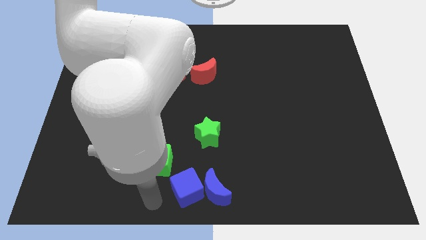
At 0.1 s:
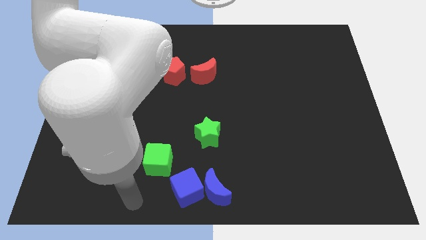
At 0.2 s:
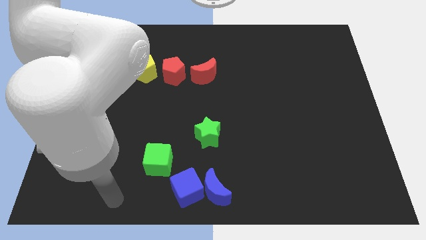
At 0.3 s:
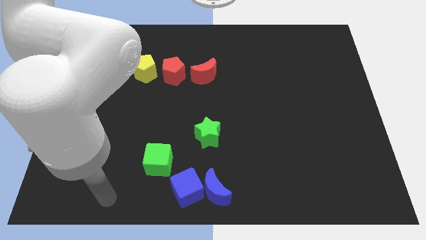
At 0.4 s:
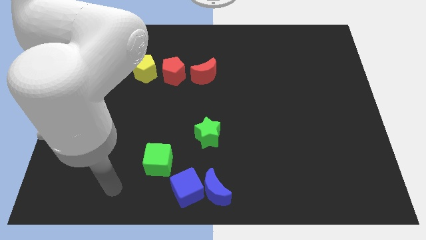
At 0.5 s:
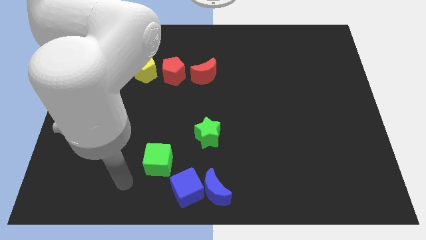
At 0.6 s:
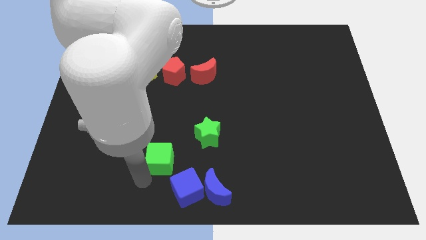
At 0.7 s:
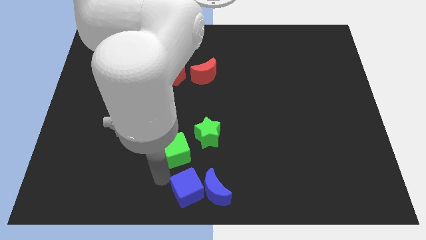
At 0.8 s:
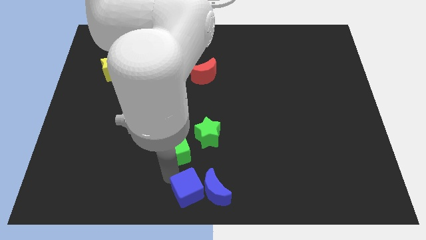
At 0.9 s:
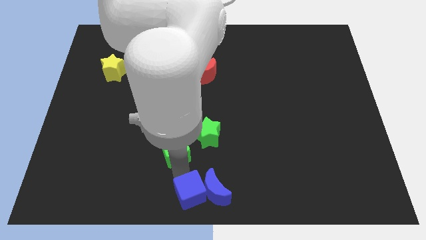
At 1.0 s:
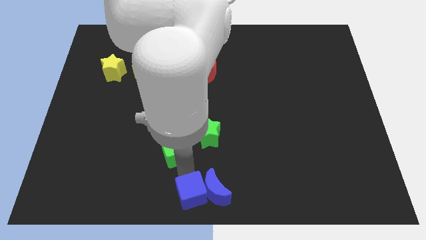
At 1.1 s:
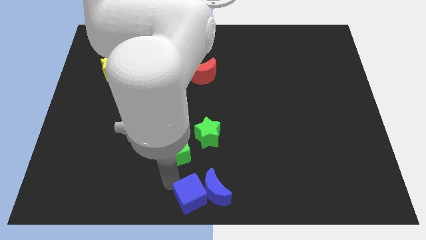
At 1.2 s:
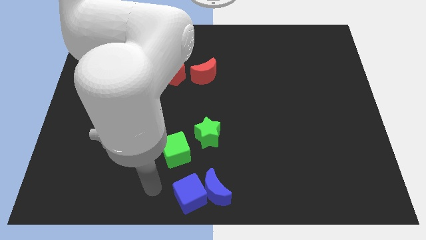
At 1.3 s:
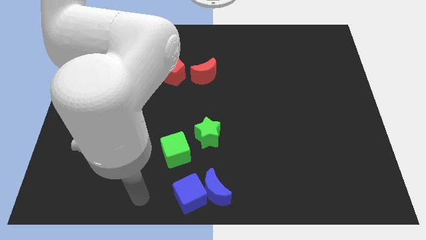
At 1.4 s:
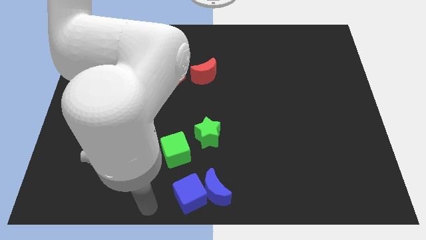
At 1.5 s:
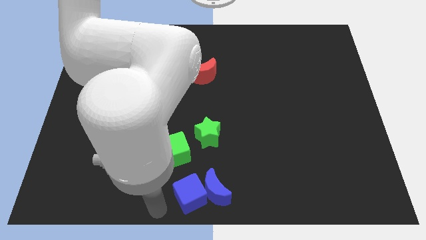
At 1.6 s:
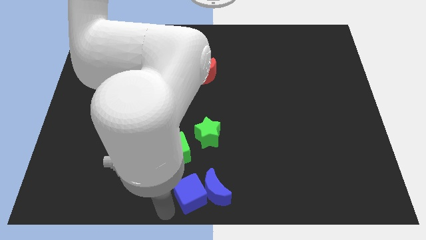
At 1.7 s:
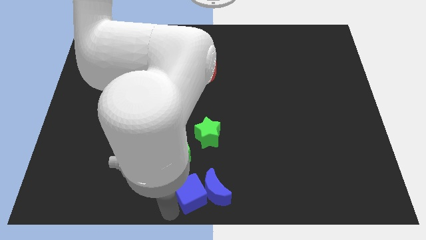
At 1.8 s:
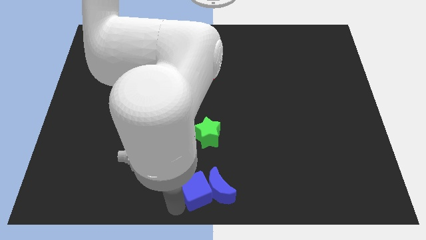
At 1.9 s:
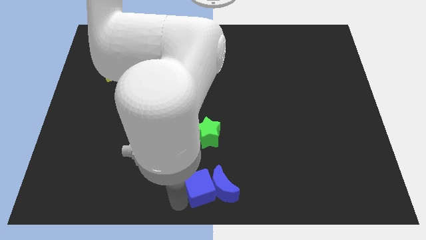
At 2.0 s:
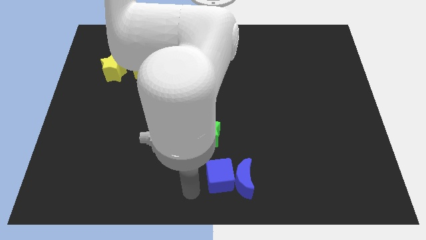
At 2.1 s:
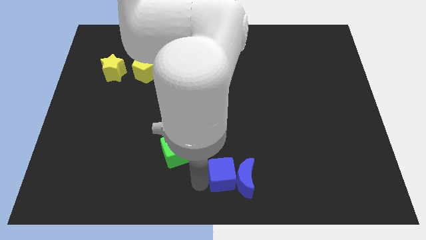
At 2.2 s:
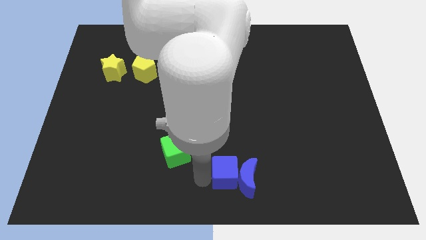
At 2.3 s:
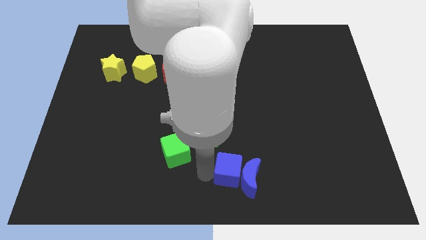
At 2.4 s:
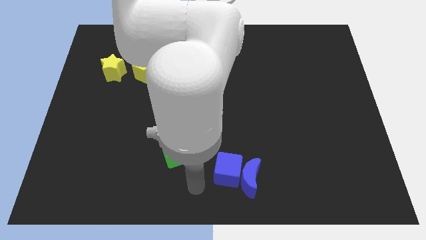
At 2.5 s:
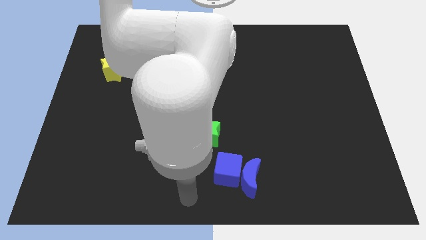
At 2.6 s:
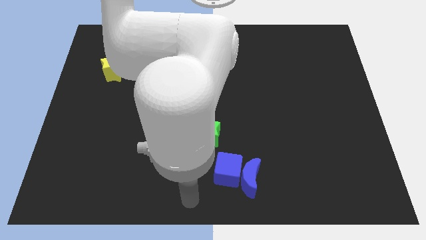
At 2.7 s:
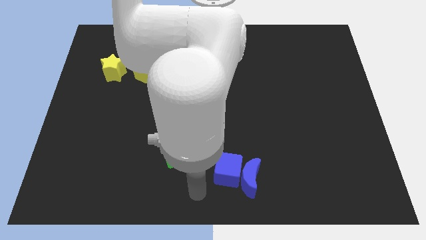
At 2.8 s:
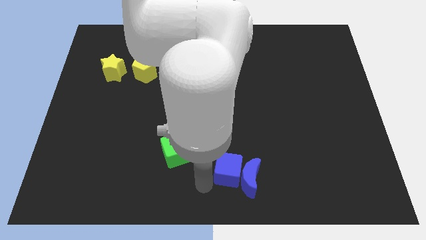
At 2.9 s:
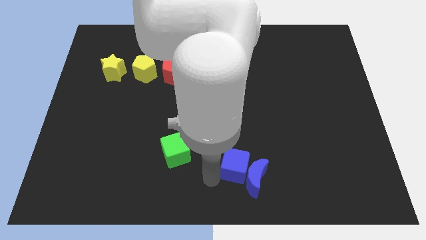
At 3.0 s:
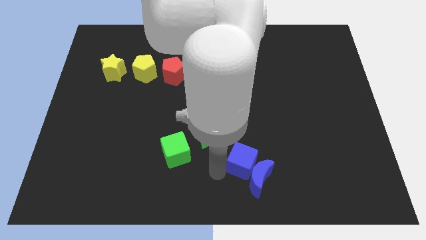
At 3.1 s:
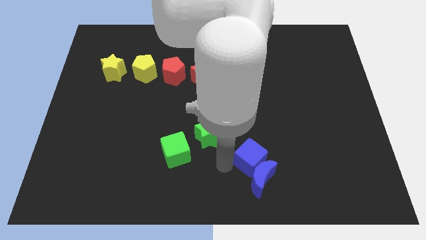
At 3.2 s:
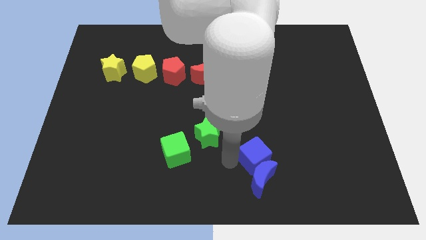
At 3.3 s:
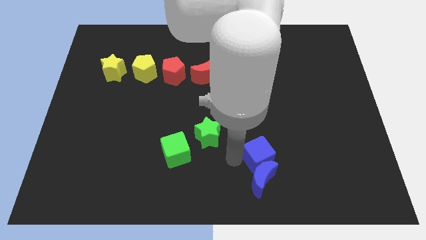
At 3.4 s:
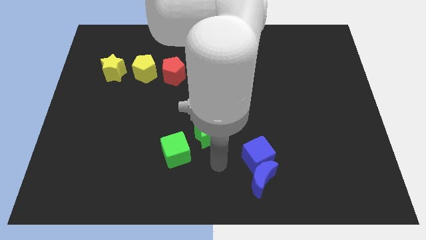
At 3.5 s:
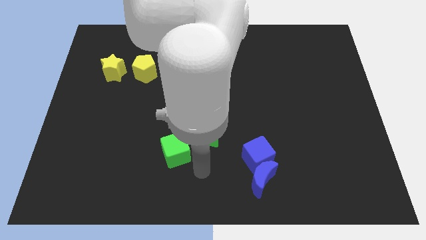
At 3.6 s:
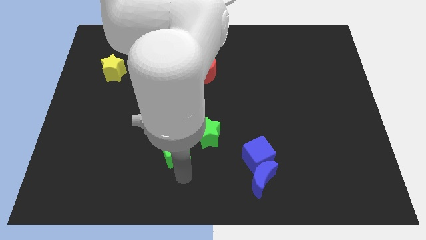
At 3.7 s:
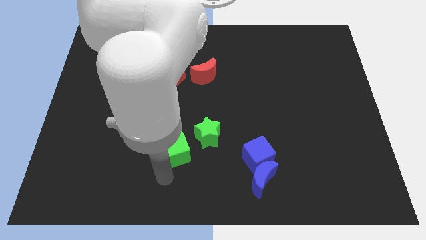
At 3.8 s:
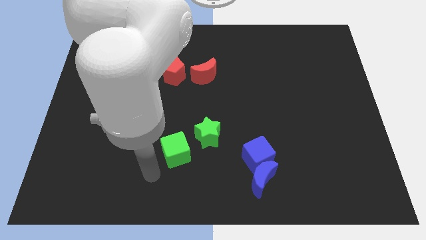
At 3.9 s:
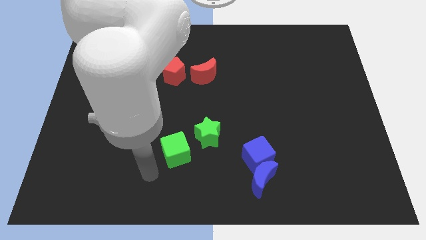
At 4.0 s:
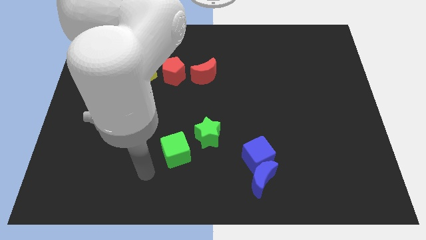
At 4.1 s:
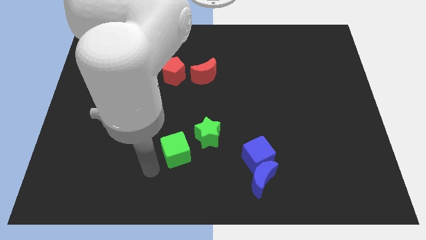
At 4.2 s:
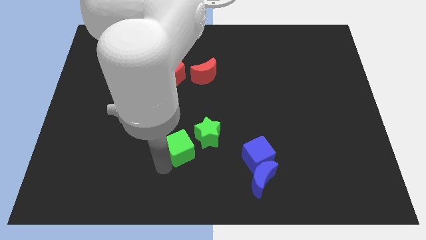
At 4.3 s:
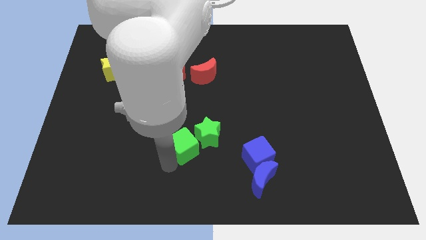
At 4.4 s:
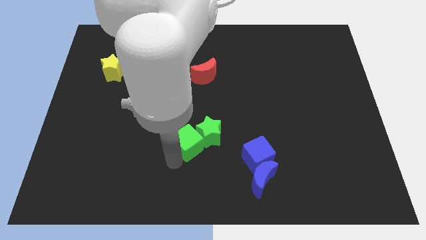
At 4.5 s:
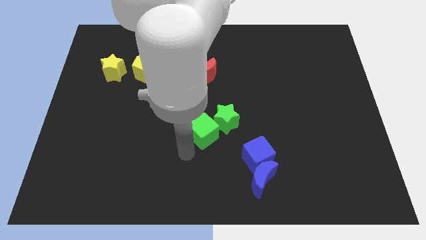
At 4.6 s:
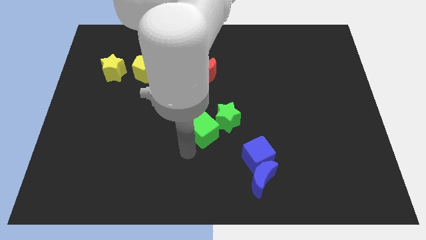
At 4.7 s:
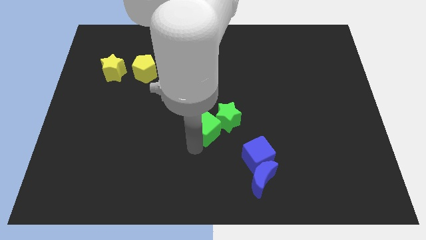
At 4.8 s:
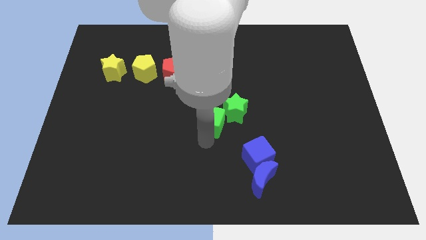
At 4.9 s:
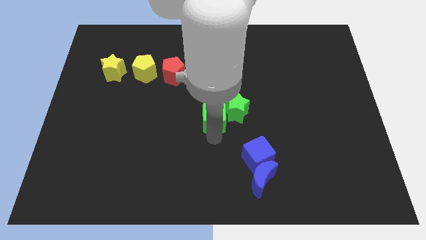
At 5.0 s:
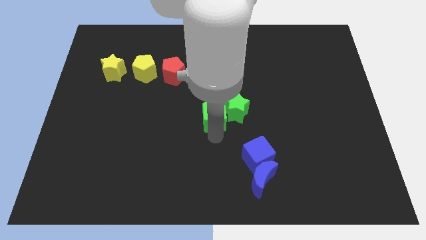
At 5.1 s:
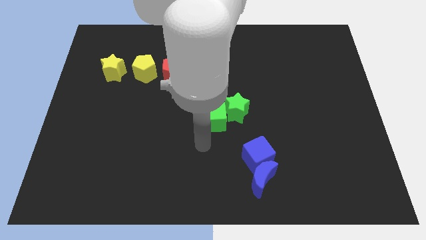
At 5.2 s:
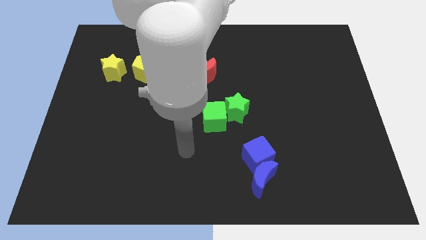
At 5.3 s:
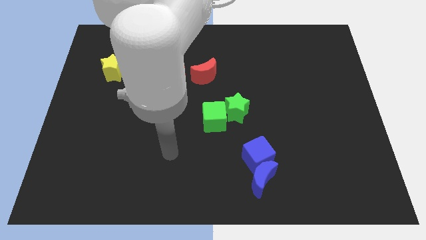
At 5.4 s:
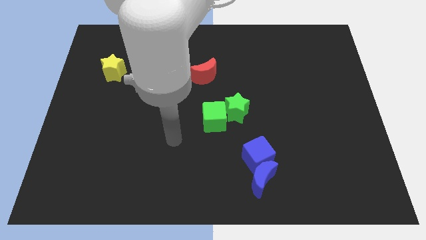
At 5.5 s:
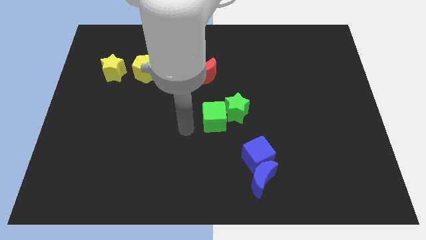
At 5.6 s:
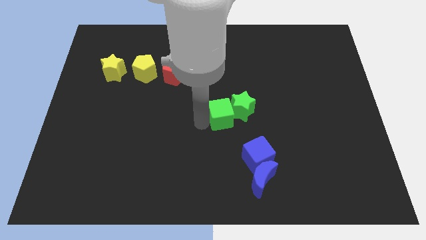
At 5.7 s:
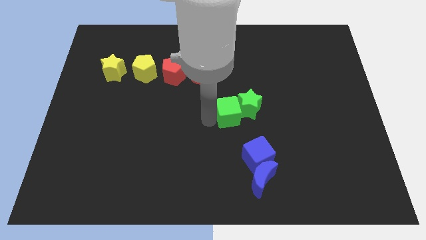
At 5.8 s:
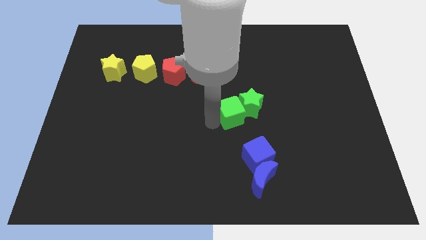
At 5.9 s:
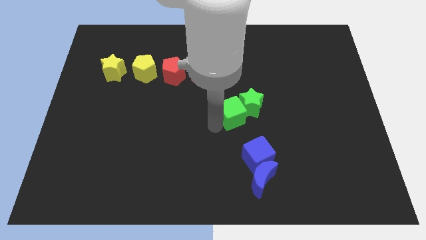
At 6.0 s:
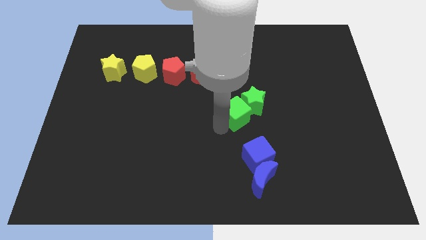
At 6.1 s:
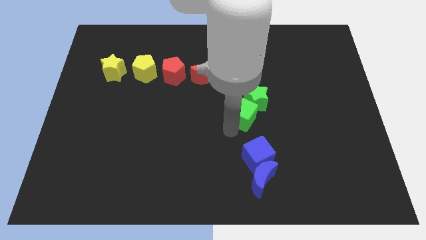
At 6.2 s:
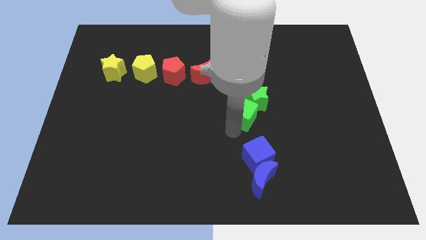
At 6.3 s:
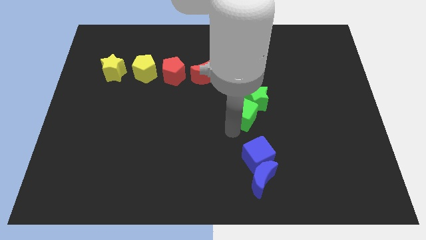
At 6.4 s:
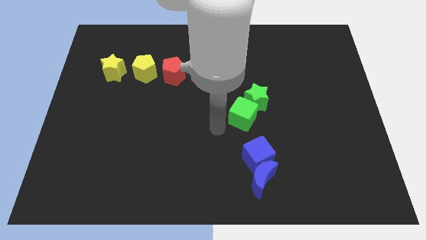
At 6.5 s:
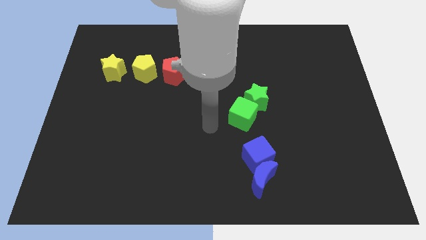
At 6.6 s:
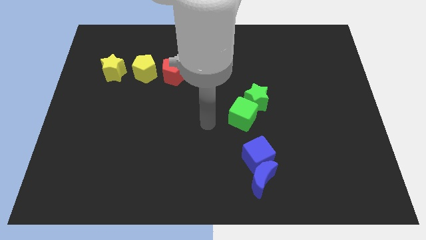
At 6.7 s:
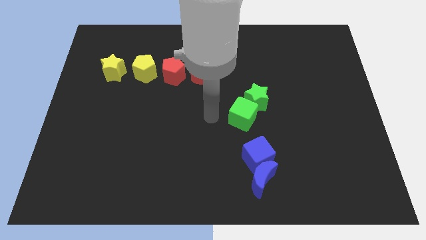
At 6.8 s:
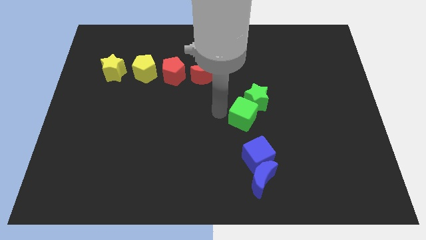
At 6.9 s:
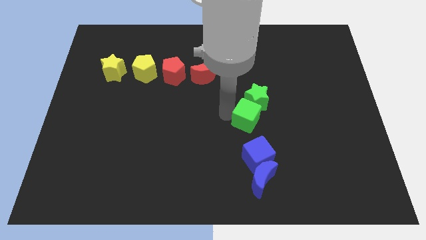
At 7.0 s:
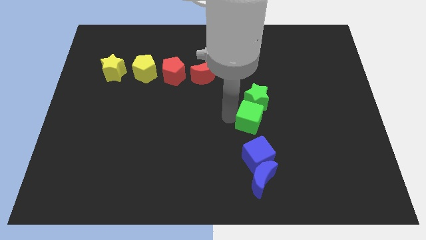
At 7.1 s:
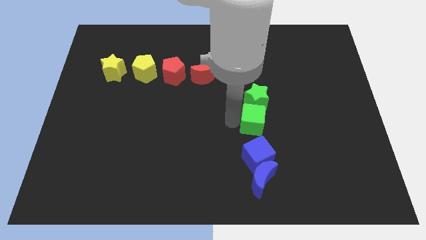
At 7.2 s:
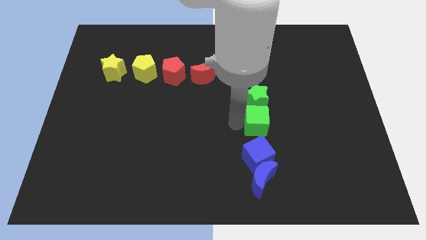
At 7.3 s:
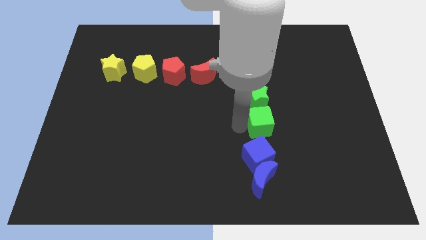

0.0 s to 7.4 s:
push the green cube and green star upward

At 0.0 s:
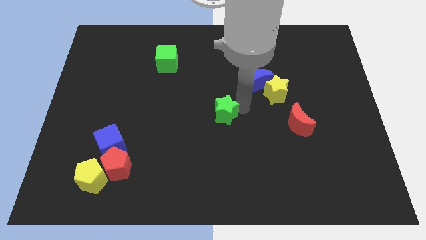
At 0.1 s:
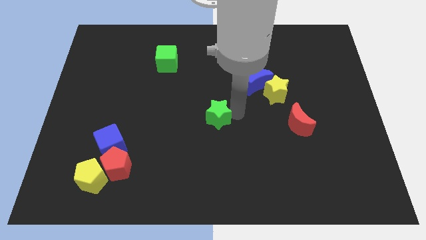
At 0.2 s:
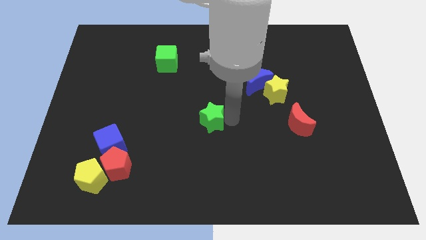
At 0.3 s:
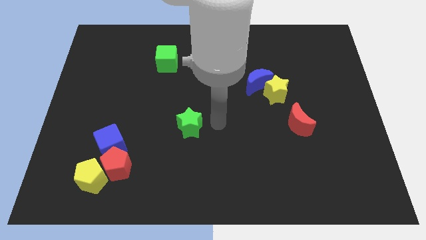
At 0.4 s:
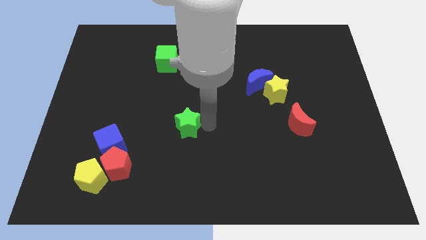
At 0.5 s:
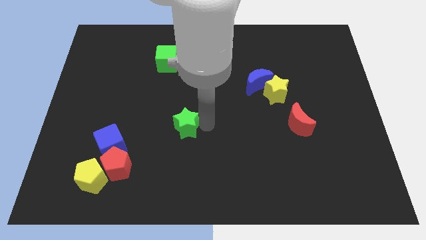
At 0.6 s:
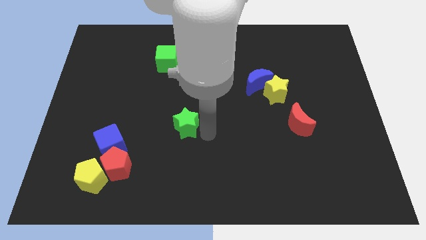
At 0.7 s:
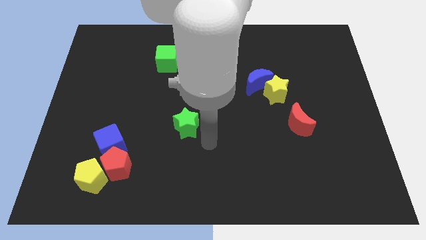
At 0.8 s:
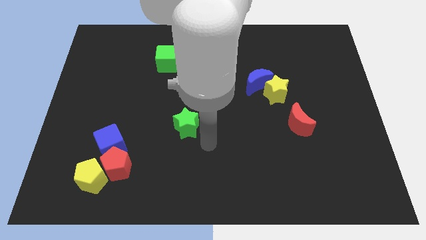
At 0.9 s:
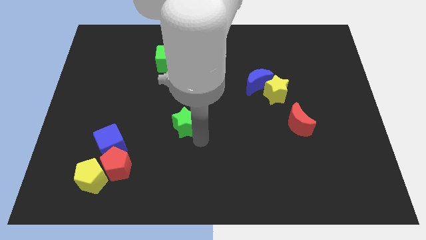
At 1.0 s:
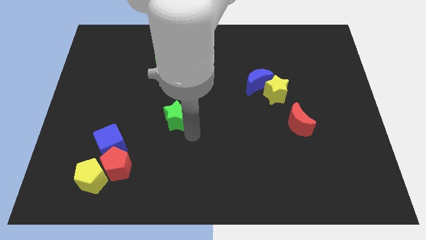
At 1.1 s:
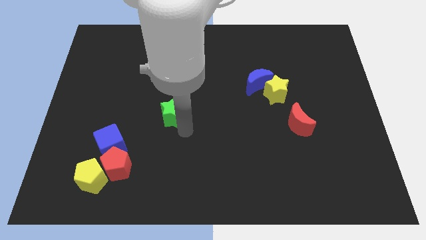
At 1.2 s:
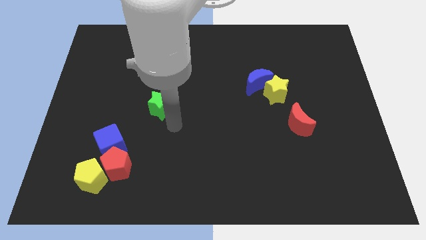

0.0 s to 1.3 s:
place green star vertically below green cube

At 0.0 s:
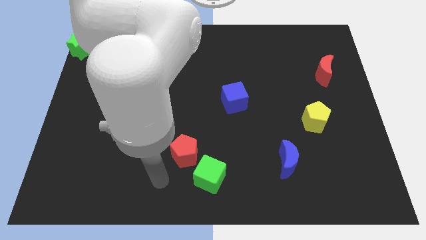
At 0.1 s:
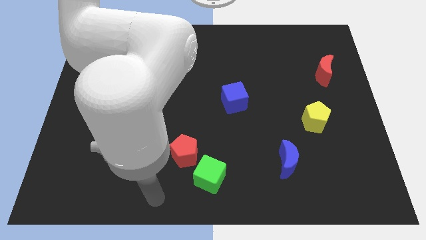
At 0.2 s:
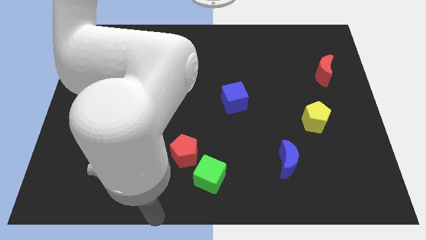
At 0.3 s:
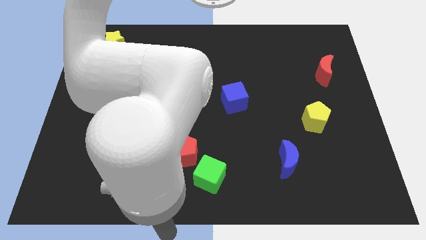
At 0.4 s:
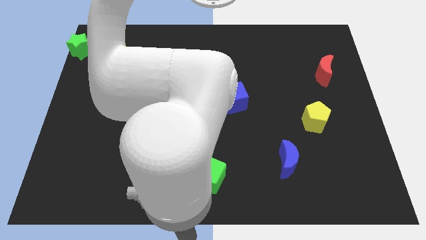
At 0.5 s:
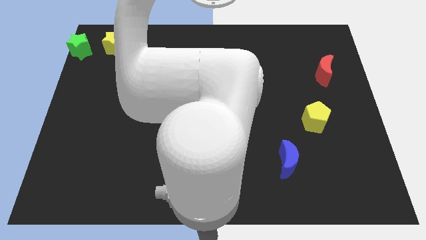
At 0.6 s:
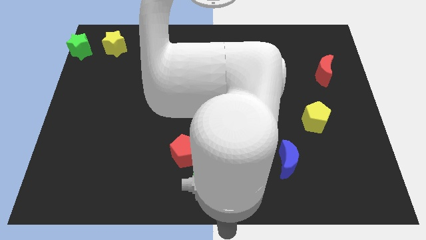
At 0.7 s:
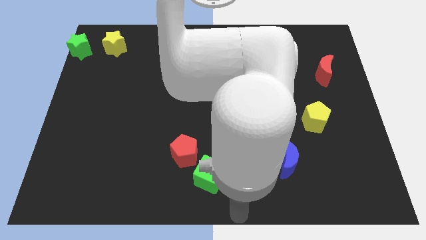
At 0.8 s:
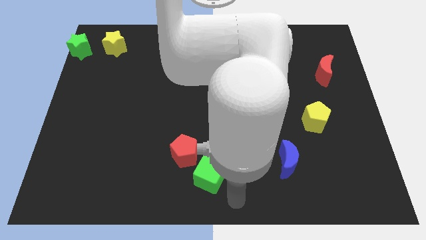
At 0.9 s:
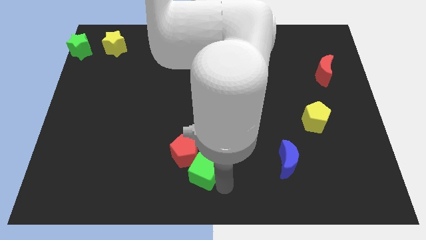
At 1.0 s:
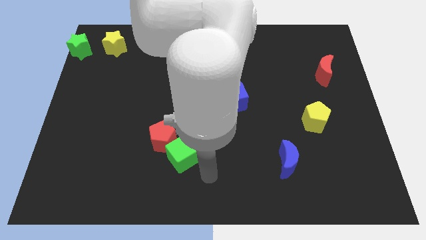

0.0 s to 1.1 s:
move the green cube into the red pentagon
